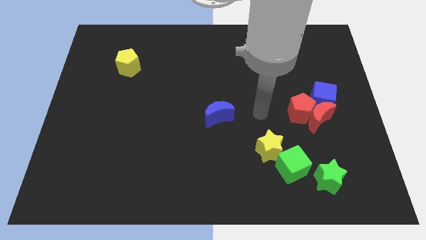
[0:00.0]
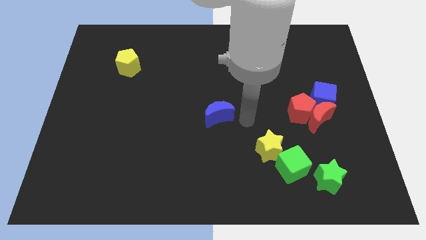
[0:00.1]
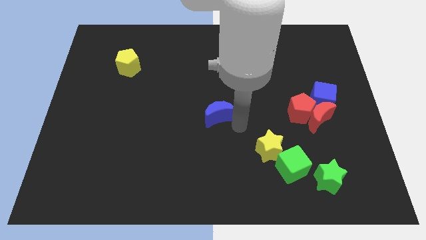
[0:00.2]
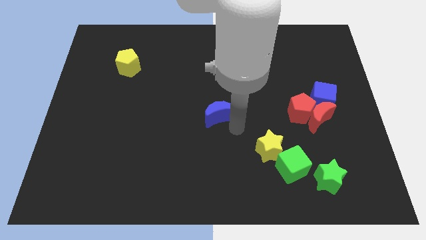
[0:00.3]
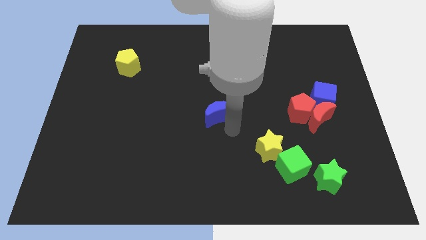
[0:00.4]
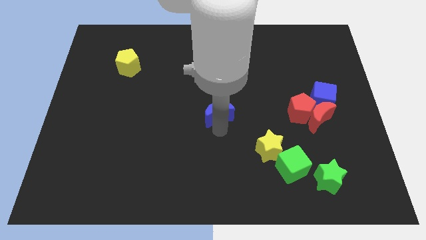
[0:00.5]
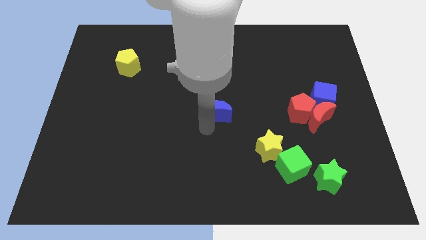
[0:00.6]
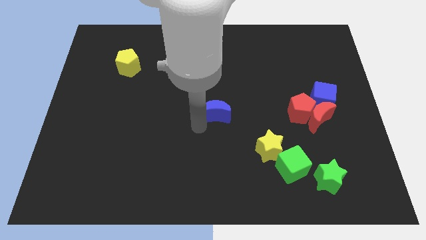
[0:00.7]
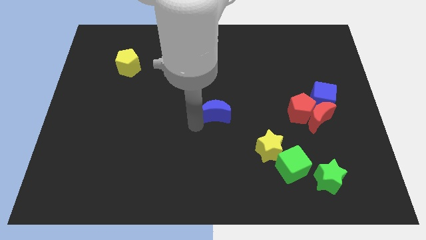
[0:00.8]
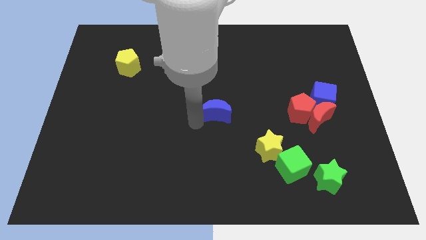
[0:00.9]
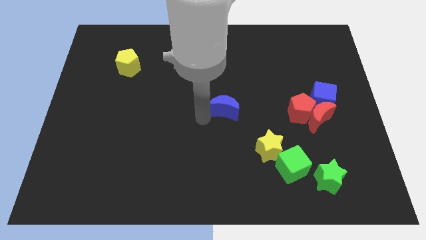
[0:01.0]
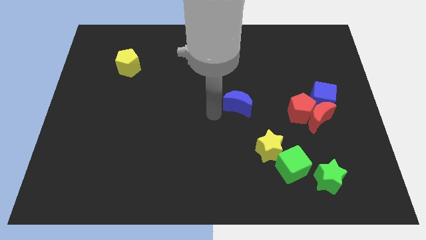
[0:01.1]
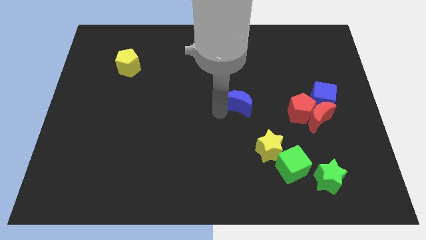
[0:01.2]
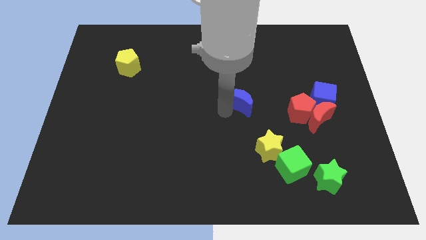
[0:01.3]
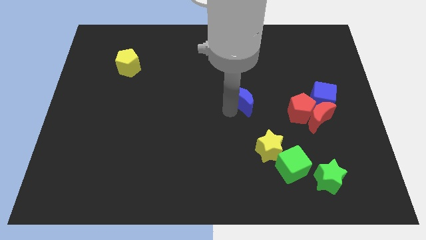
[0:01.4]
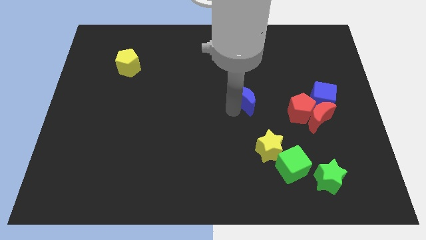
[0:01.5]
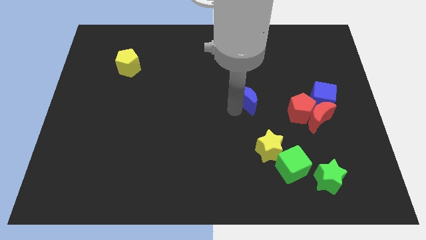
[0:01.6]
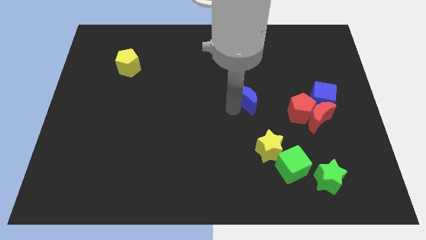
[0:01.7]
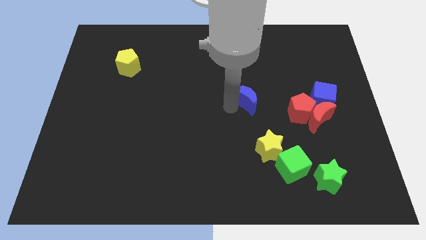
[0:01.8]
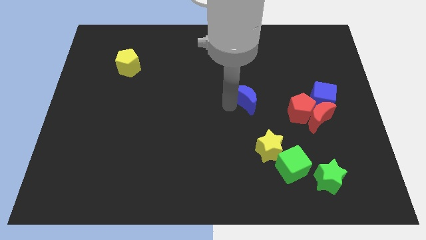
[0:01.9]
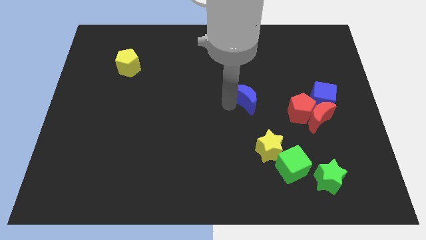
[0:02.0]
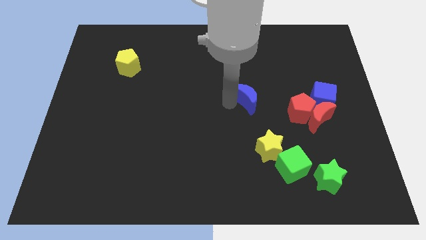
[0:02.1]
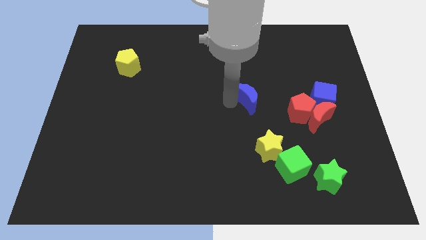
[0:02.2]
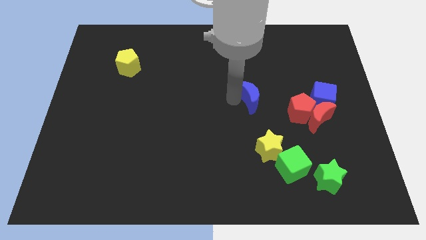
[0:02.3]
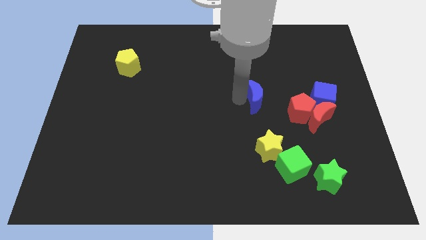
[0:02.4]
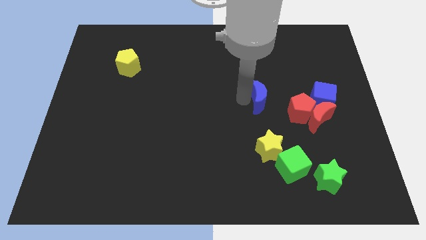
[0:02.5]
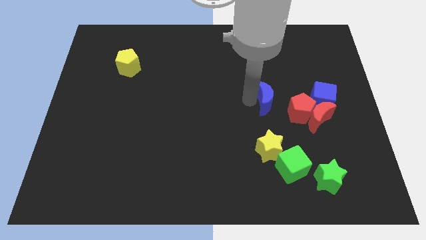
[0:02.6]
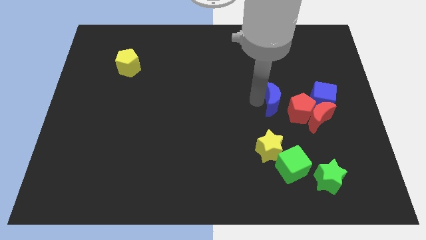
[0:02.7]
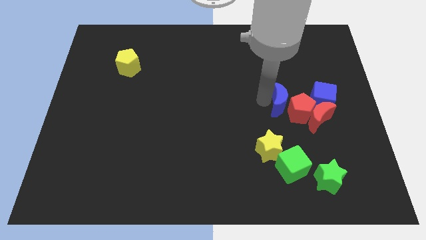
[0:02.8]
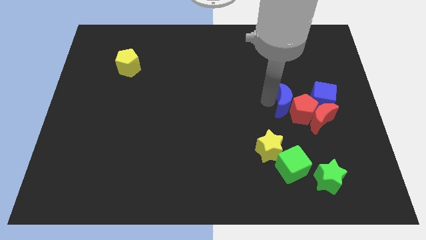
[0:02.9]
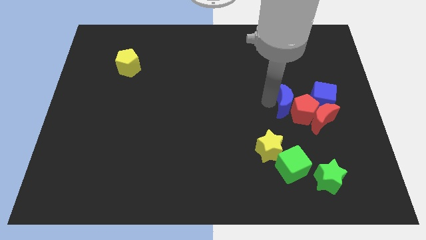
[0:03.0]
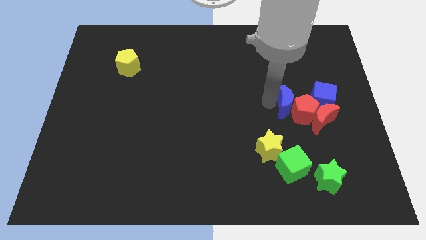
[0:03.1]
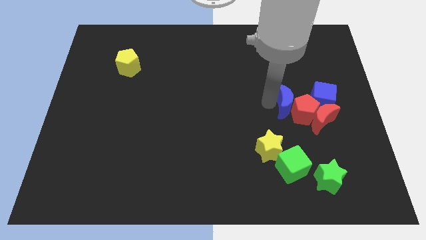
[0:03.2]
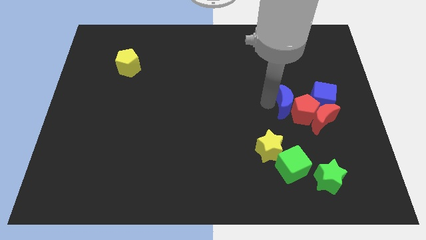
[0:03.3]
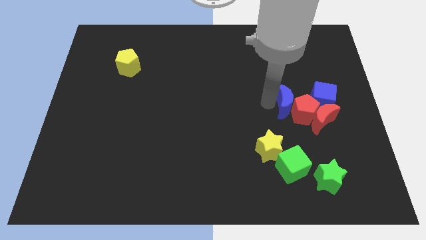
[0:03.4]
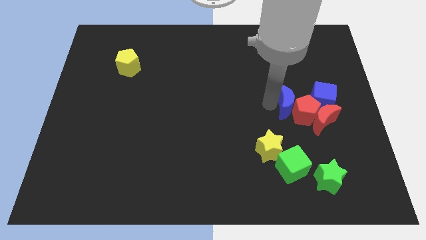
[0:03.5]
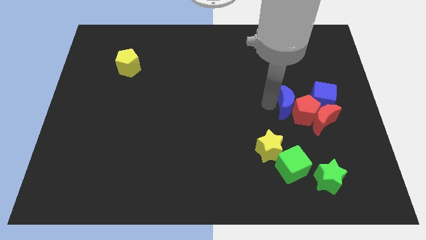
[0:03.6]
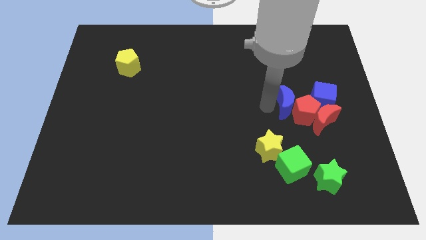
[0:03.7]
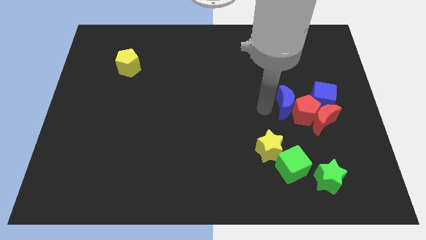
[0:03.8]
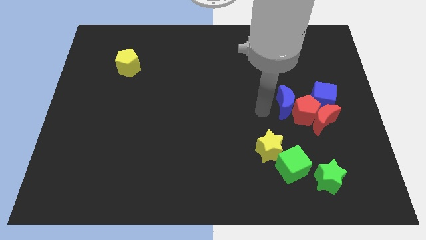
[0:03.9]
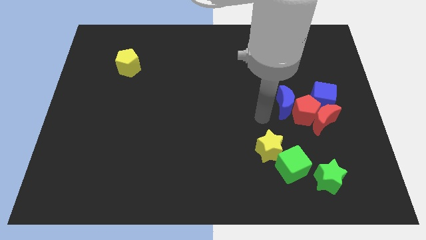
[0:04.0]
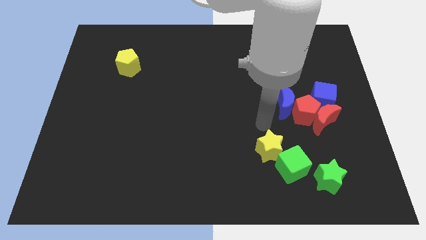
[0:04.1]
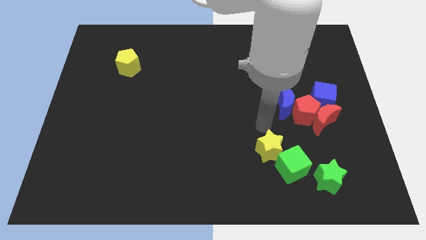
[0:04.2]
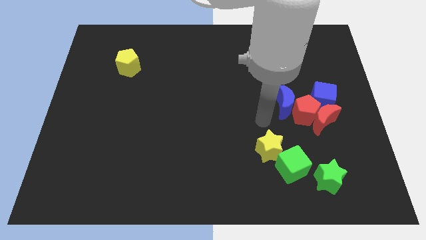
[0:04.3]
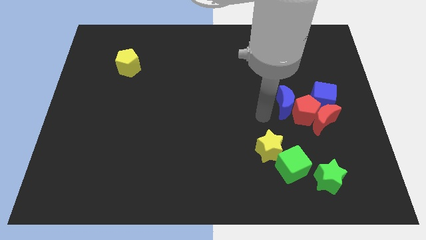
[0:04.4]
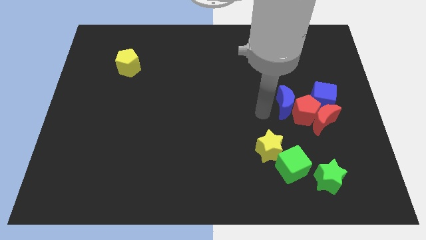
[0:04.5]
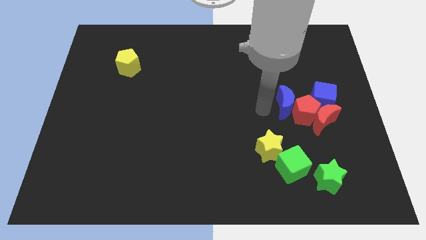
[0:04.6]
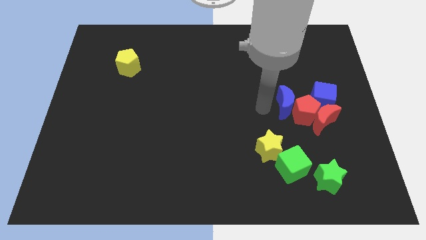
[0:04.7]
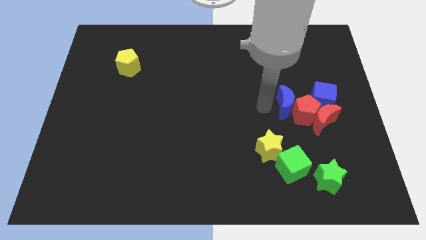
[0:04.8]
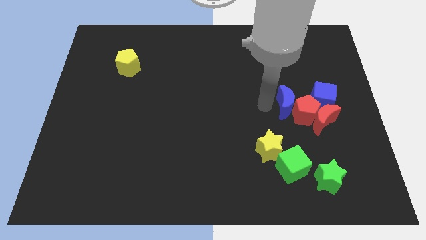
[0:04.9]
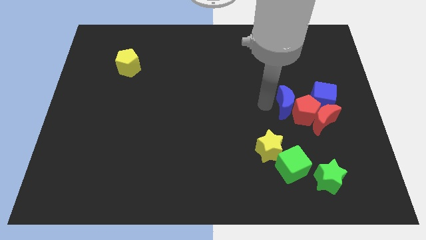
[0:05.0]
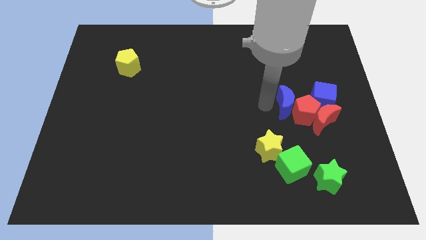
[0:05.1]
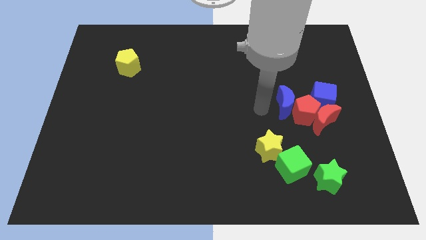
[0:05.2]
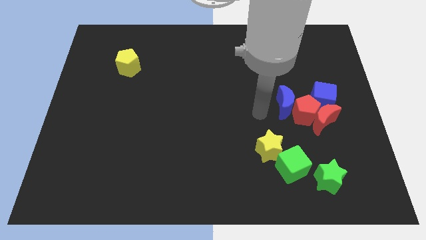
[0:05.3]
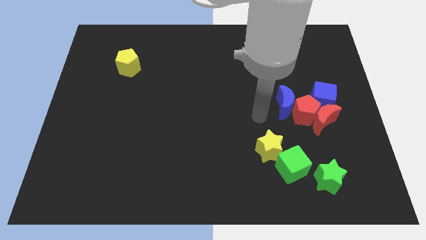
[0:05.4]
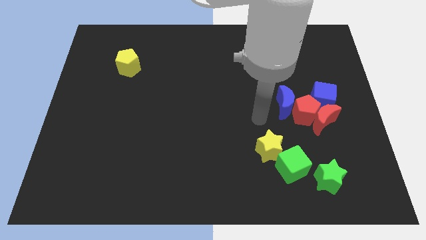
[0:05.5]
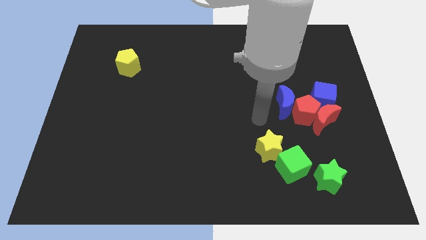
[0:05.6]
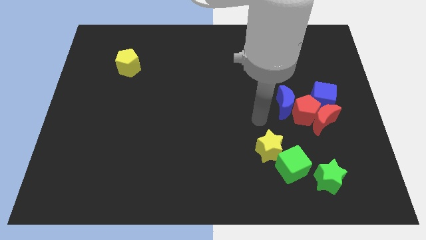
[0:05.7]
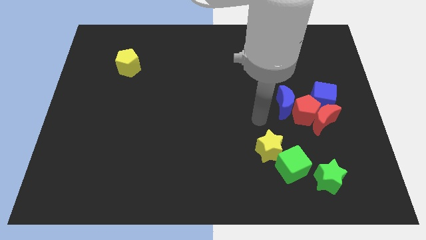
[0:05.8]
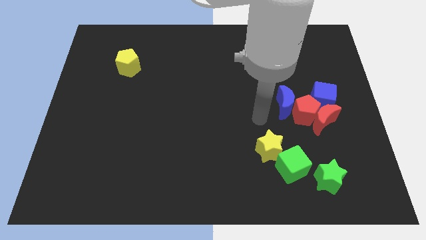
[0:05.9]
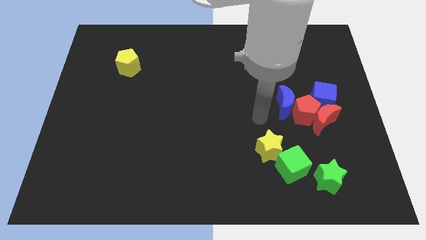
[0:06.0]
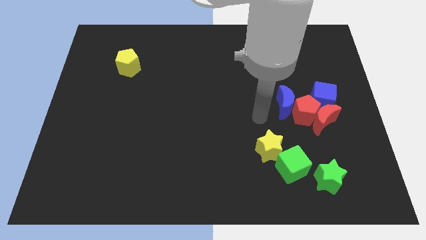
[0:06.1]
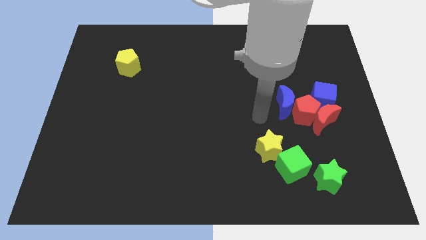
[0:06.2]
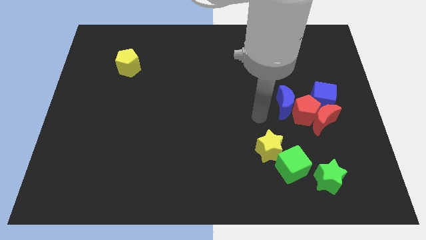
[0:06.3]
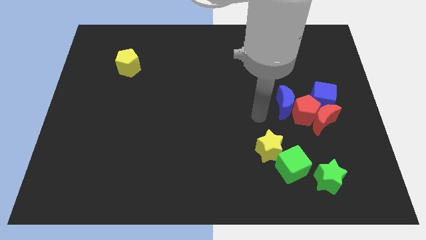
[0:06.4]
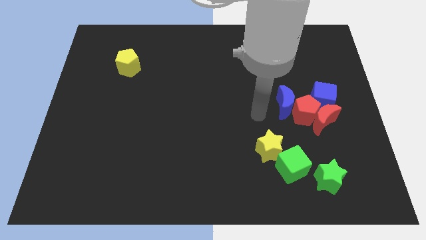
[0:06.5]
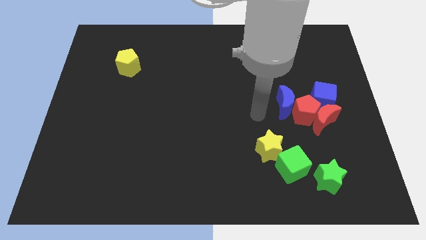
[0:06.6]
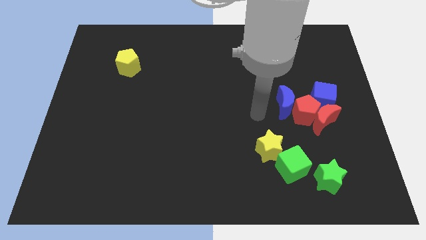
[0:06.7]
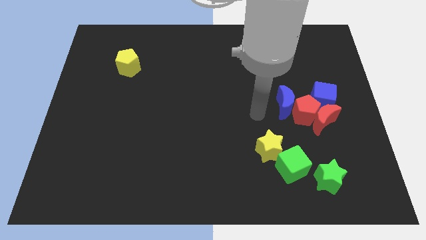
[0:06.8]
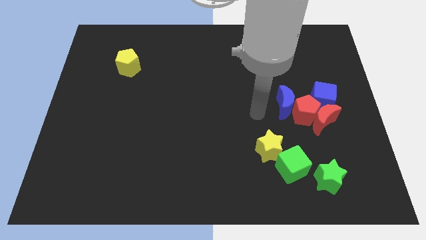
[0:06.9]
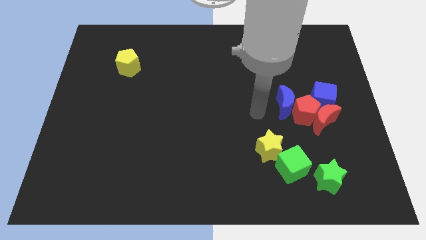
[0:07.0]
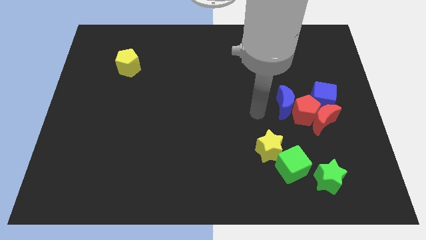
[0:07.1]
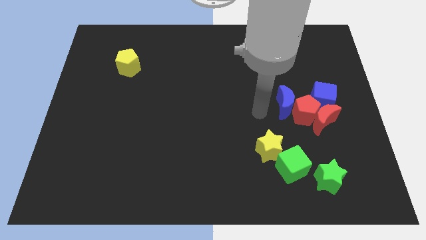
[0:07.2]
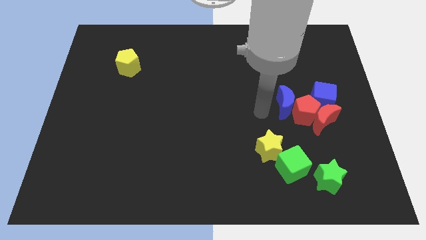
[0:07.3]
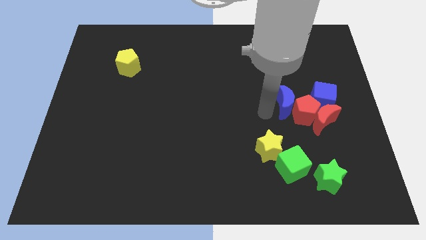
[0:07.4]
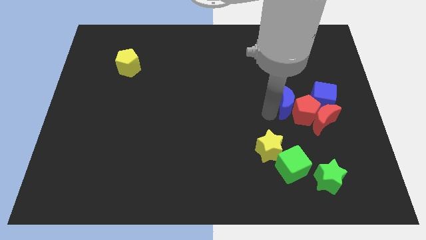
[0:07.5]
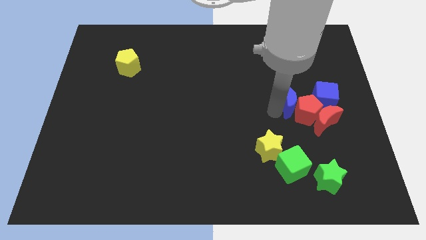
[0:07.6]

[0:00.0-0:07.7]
push the blue crescent to the left of red pentagon

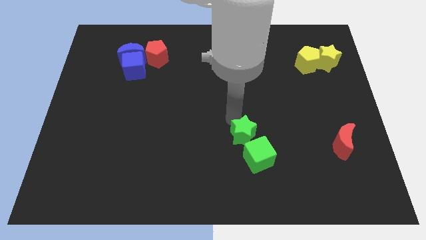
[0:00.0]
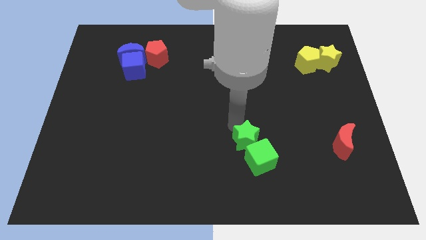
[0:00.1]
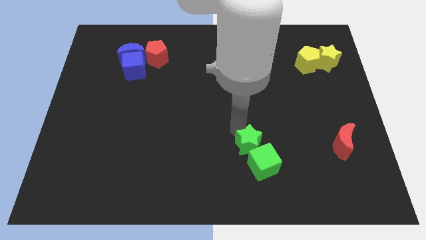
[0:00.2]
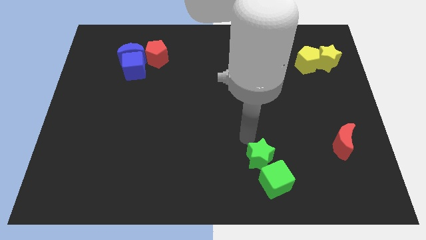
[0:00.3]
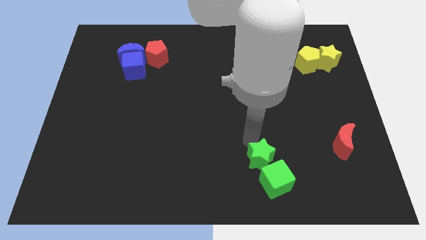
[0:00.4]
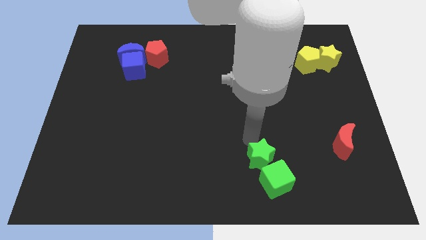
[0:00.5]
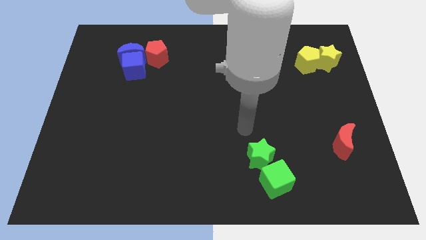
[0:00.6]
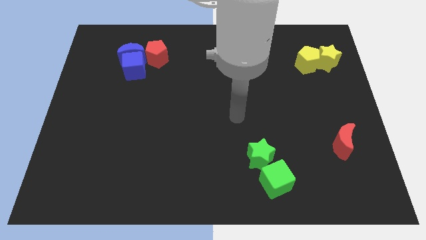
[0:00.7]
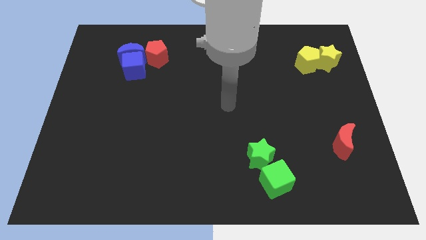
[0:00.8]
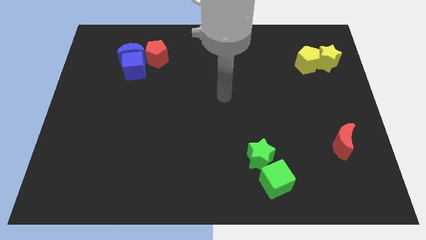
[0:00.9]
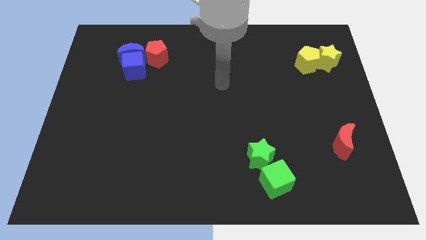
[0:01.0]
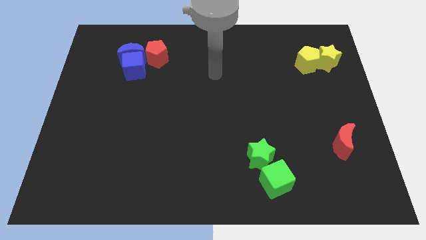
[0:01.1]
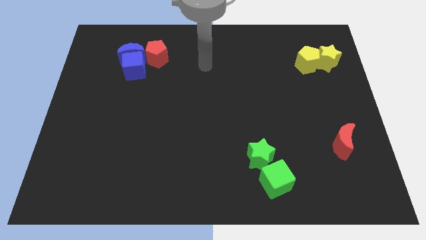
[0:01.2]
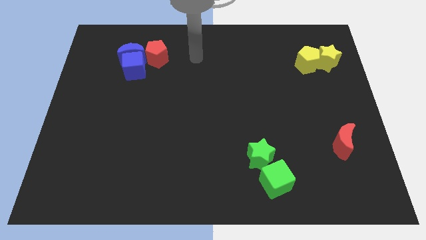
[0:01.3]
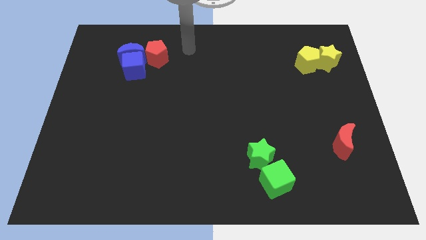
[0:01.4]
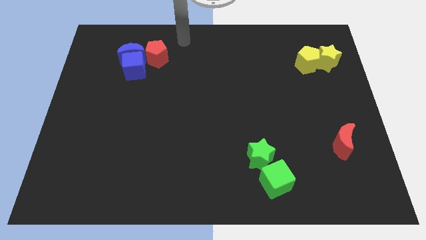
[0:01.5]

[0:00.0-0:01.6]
move yourself away from the green star
